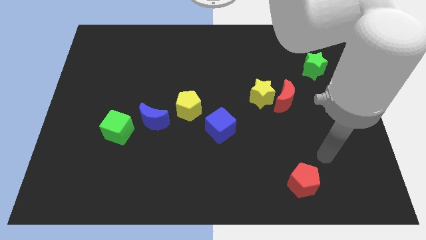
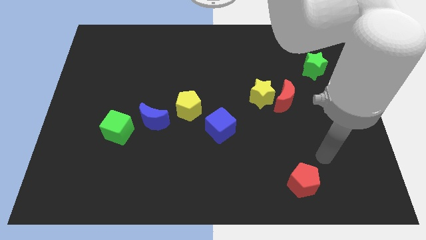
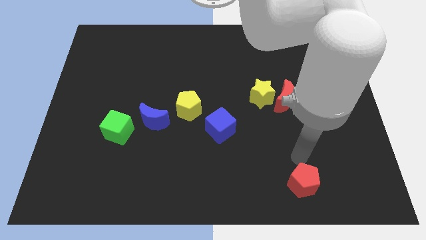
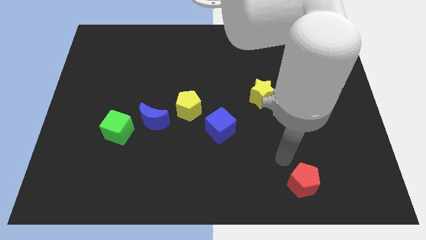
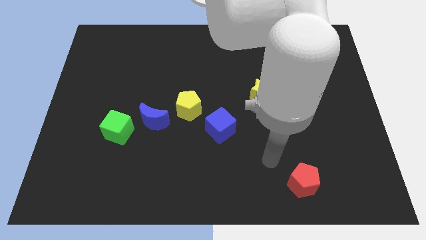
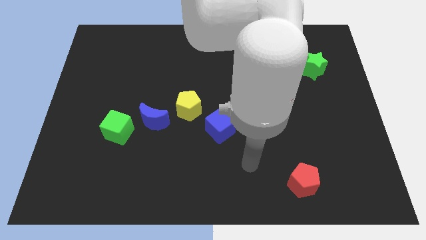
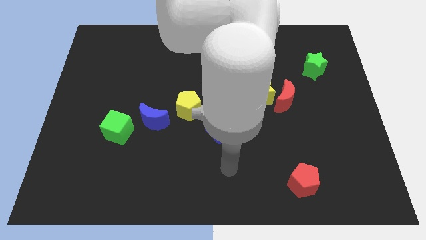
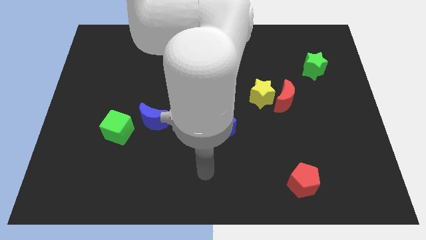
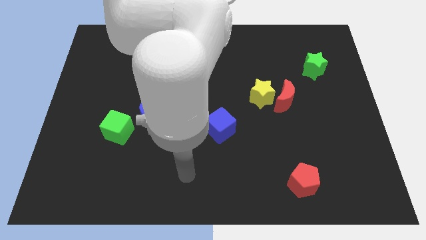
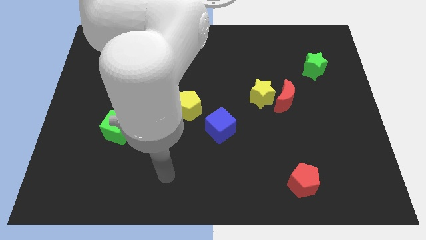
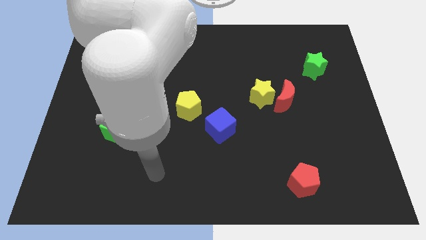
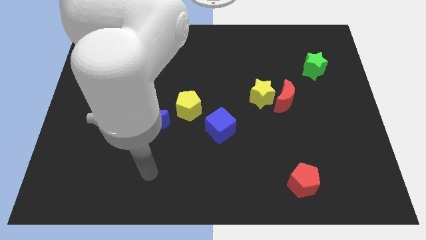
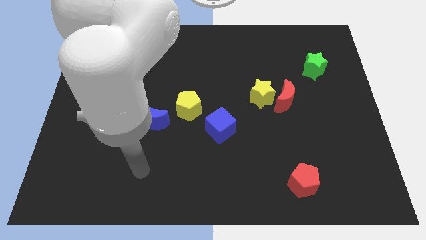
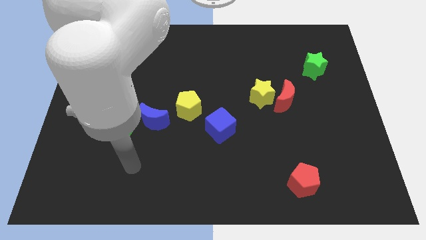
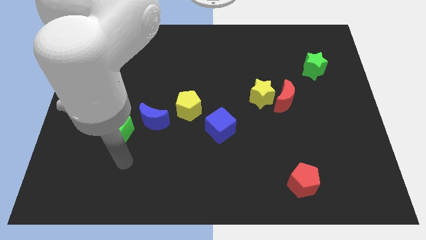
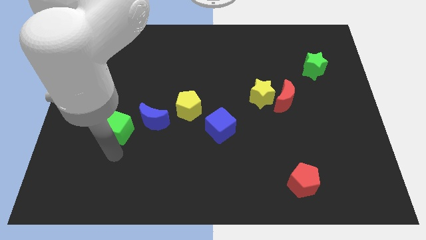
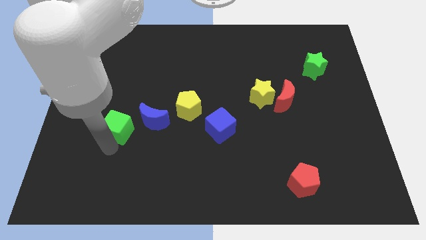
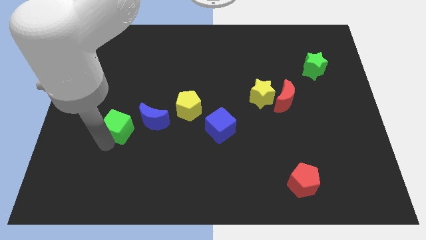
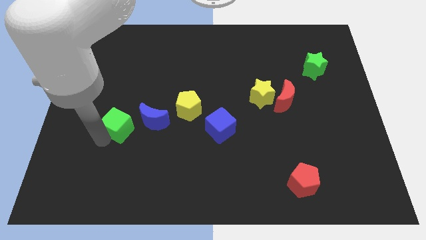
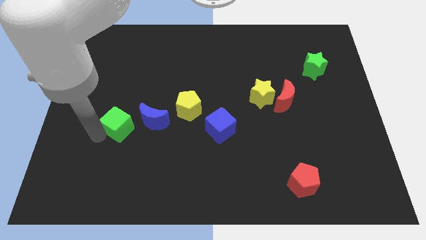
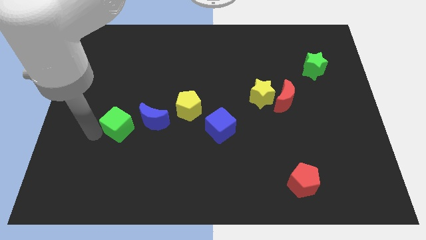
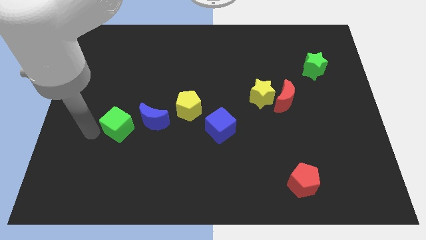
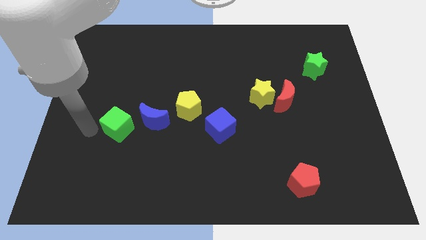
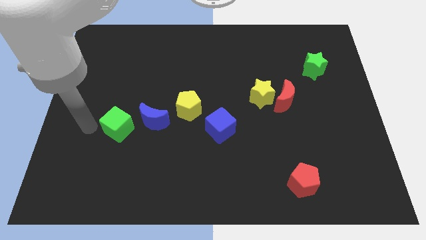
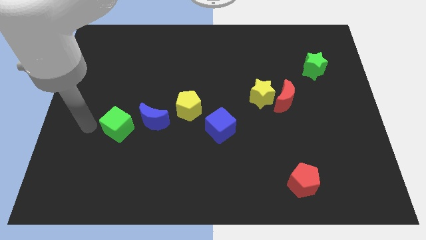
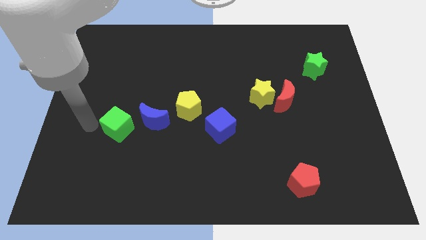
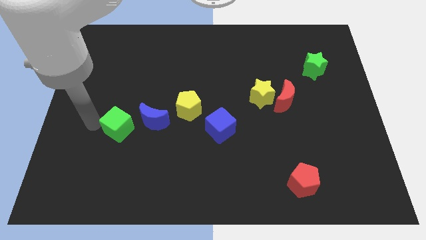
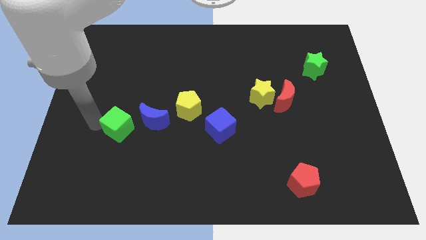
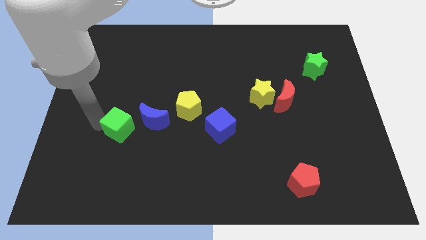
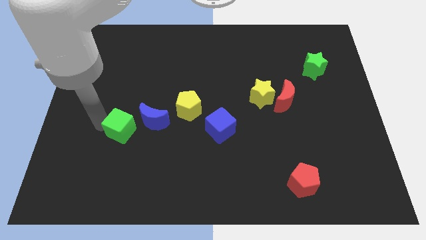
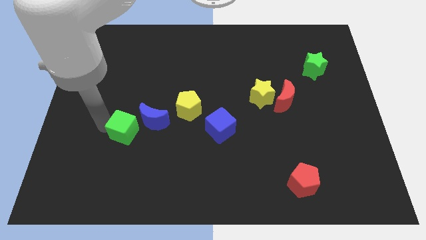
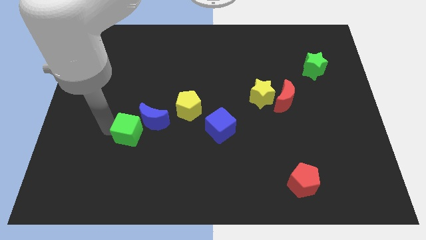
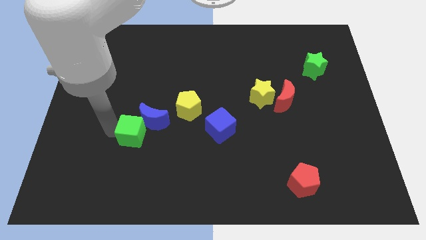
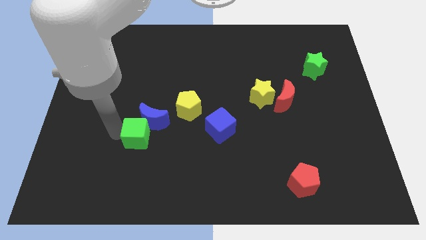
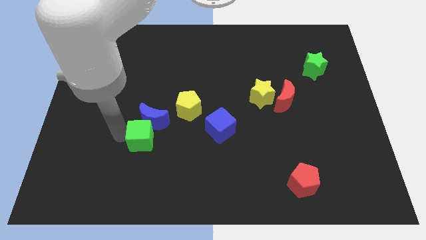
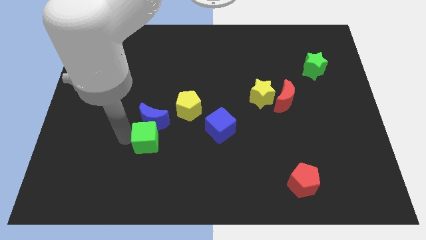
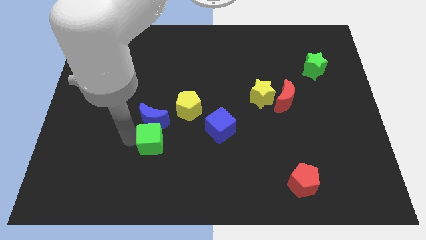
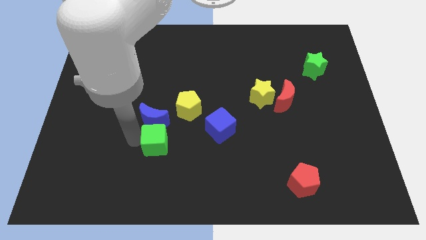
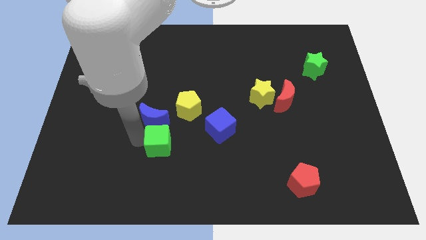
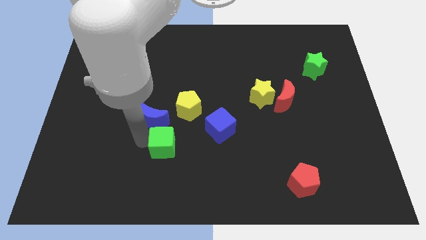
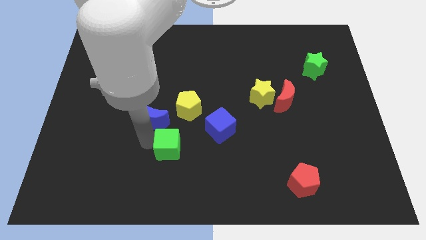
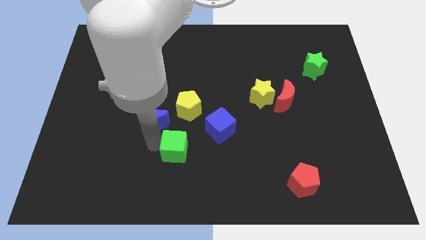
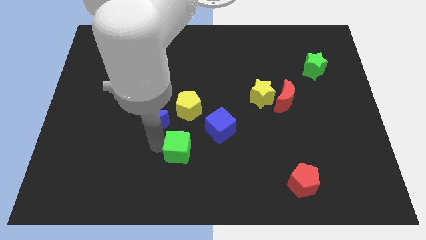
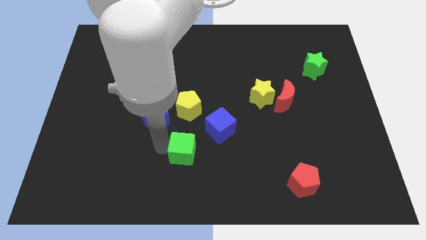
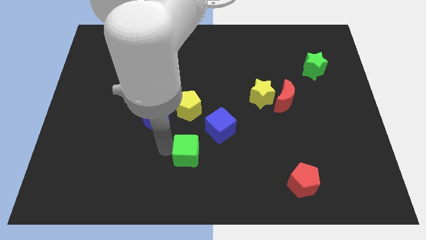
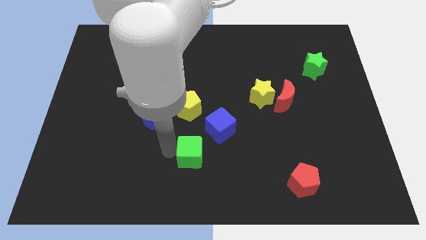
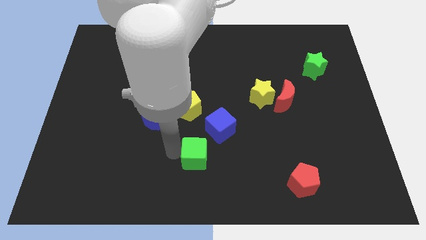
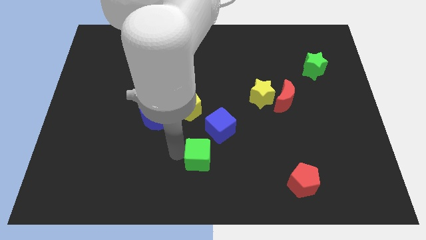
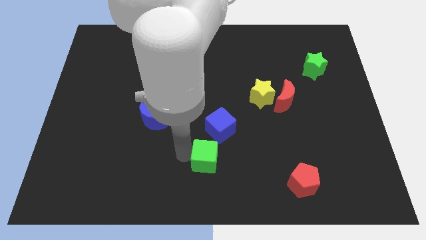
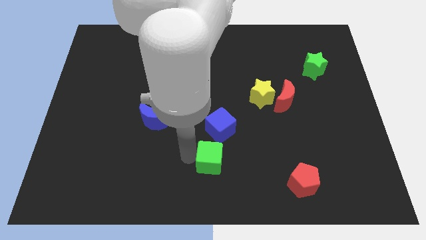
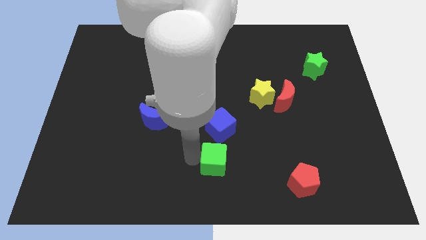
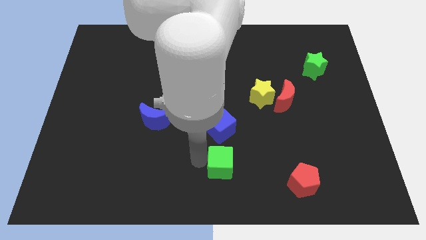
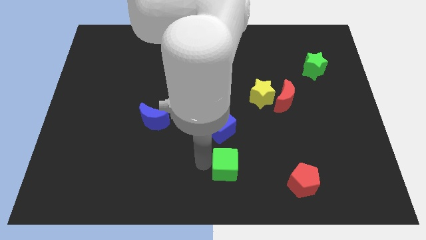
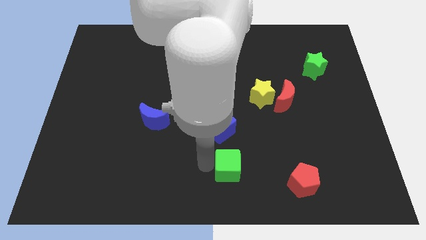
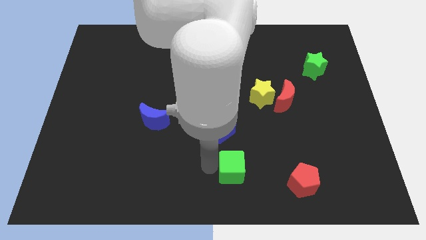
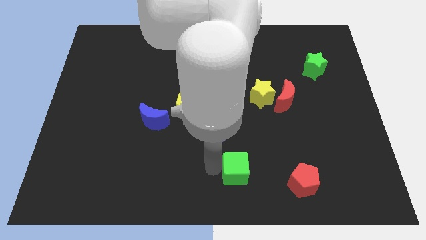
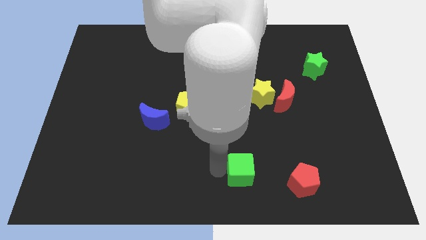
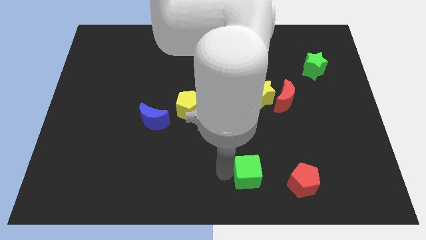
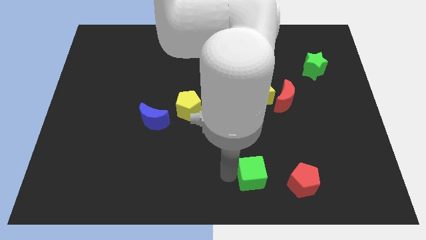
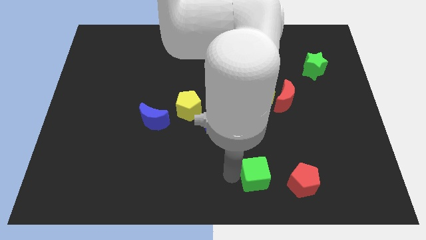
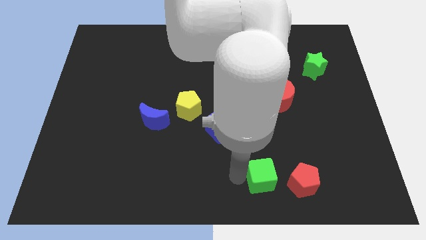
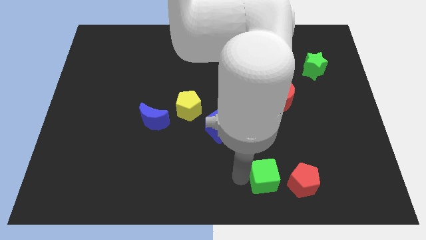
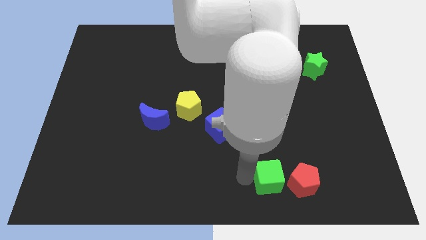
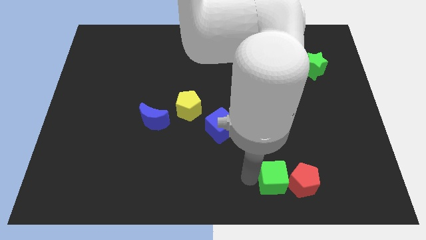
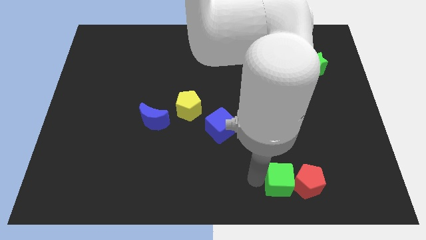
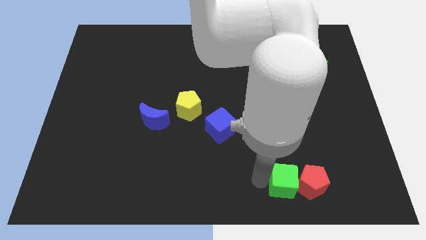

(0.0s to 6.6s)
move the green cube next to the red pentagon

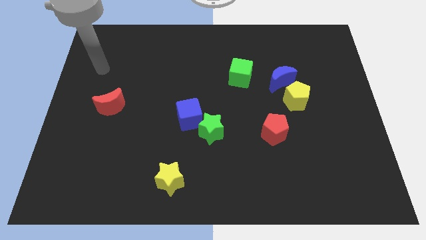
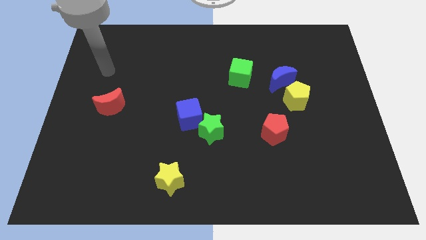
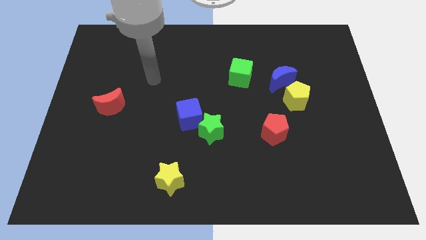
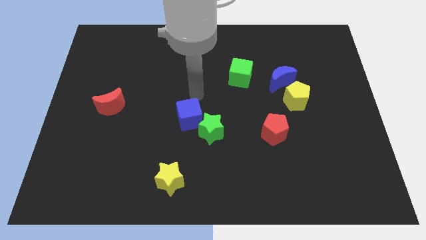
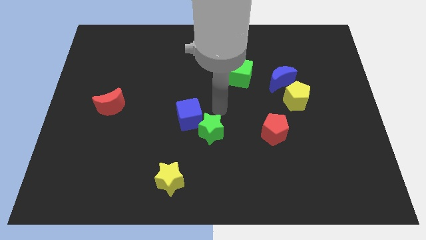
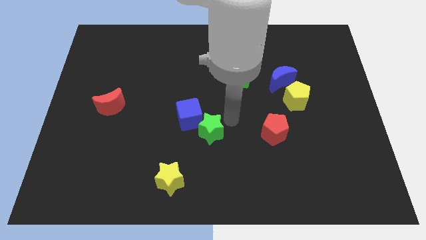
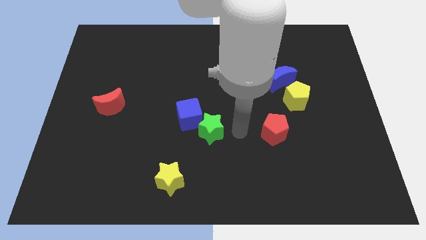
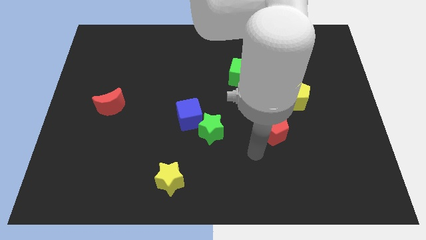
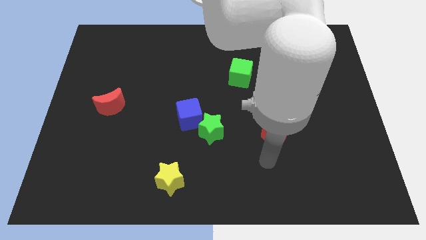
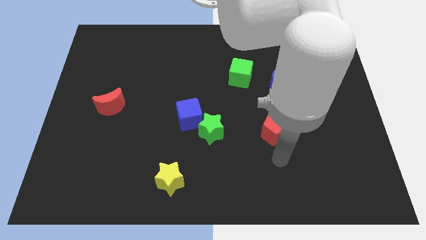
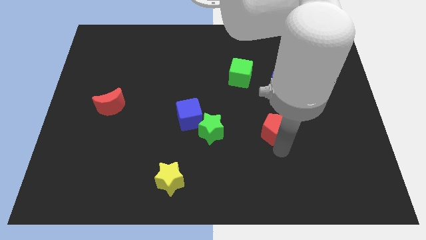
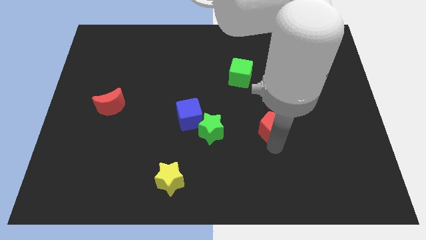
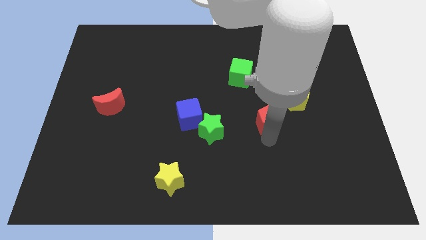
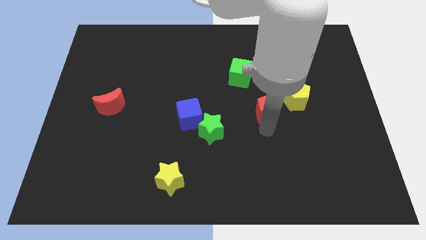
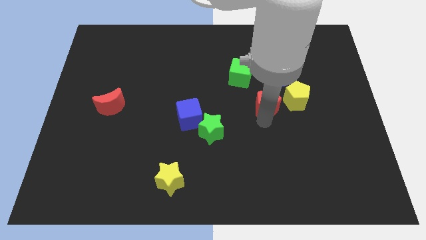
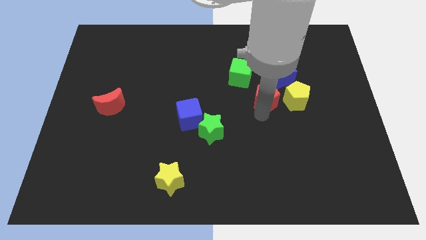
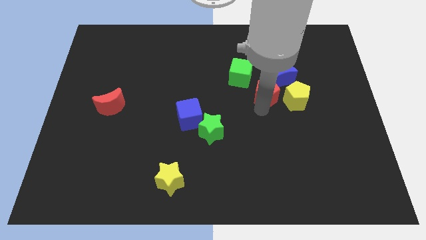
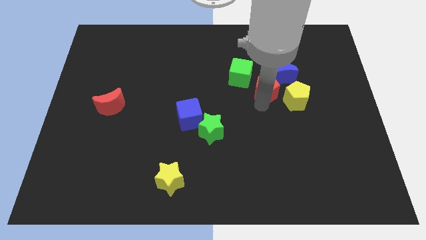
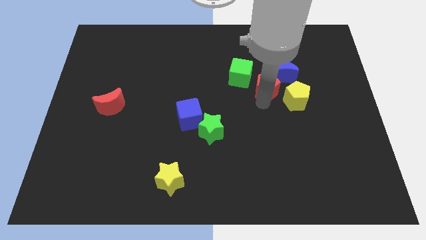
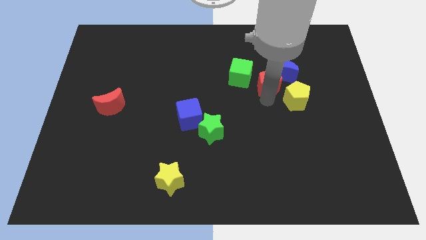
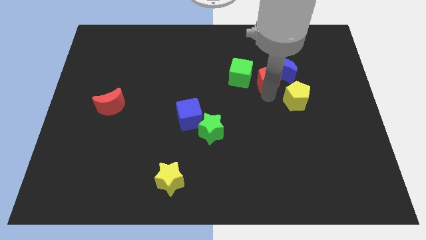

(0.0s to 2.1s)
push the red pentagon close to the blue moon
